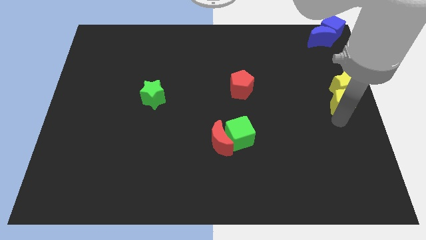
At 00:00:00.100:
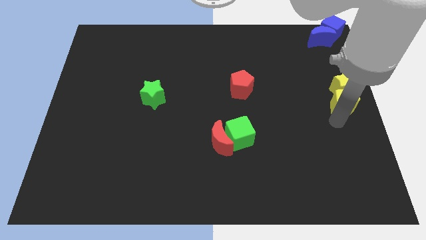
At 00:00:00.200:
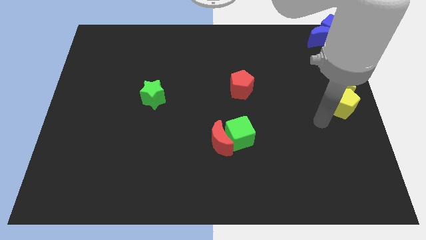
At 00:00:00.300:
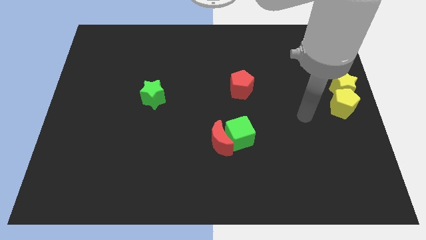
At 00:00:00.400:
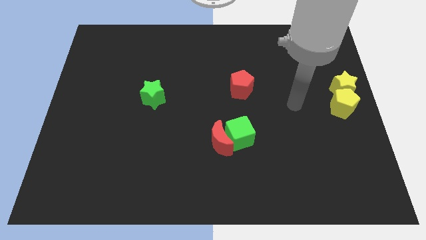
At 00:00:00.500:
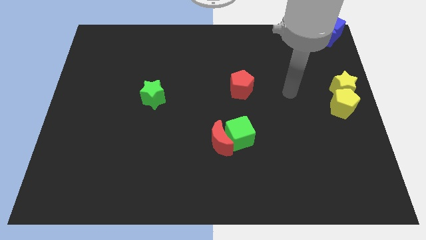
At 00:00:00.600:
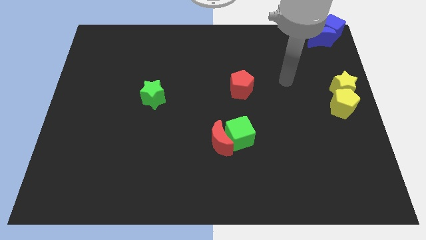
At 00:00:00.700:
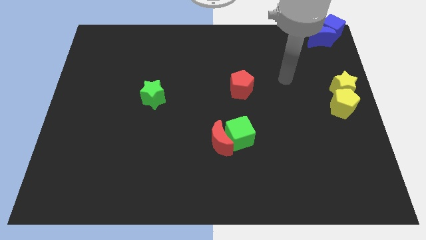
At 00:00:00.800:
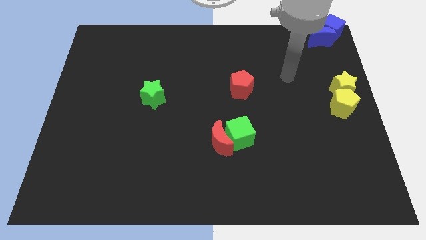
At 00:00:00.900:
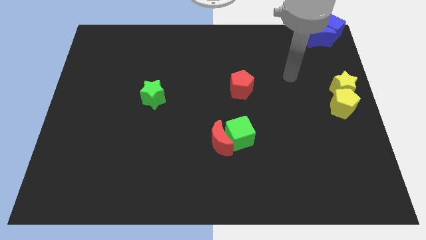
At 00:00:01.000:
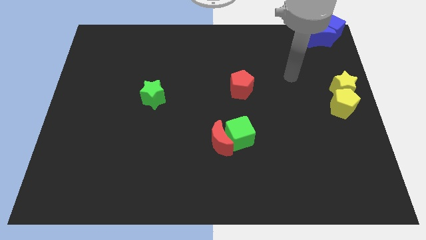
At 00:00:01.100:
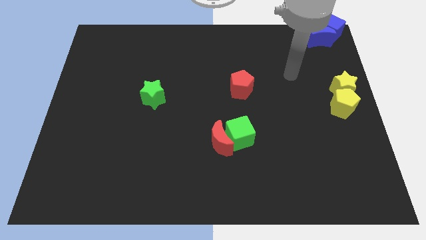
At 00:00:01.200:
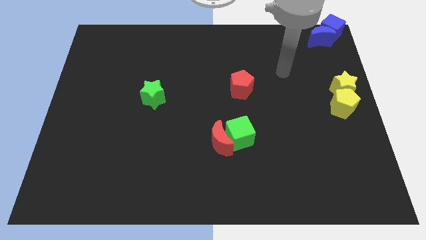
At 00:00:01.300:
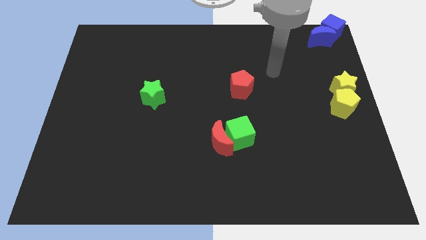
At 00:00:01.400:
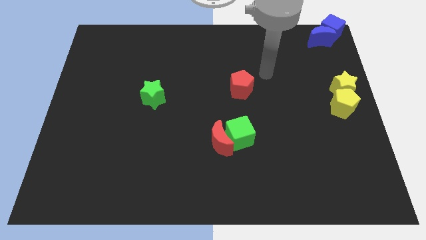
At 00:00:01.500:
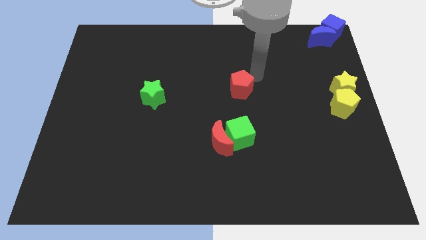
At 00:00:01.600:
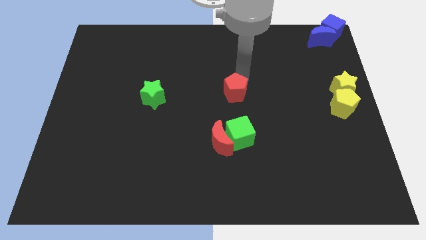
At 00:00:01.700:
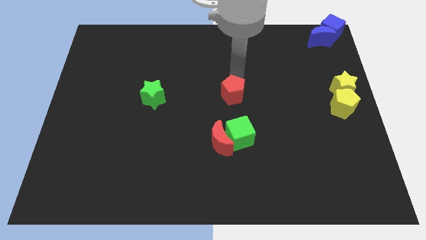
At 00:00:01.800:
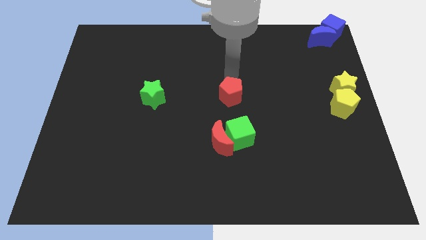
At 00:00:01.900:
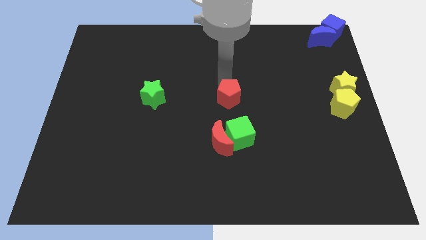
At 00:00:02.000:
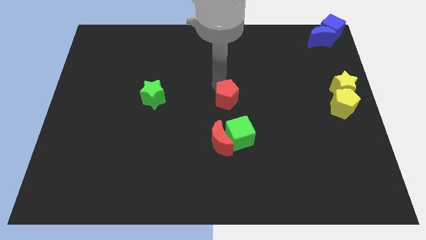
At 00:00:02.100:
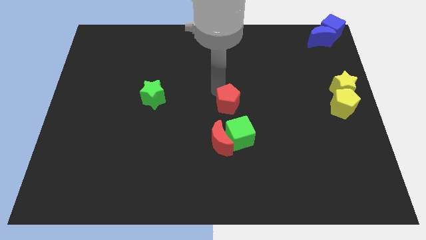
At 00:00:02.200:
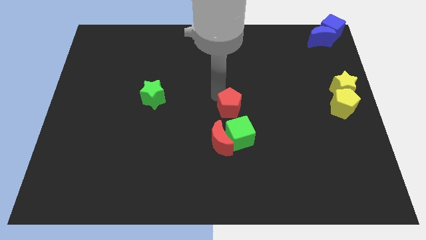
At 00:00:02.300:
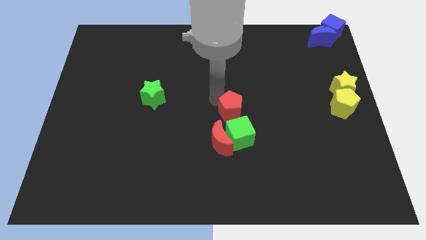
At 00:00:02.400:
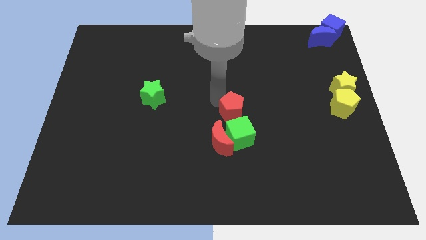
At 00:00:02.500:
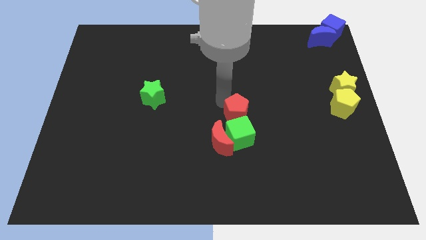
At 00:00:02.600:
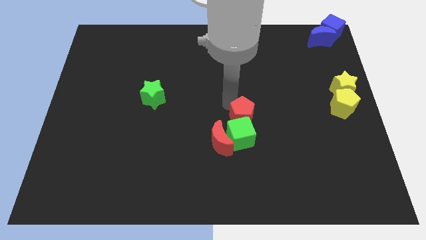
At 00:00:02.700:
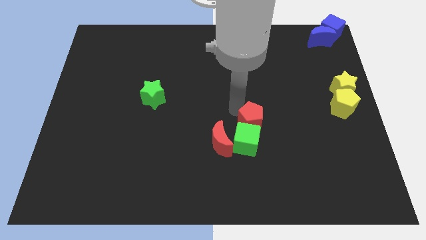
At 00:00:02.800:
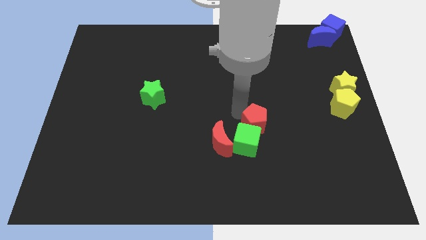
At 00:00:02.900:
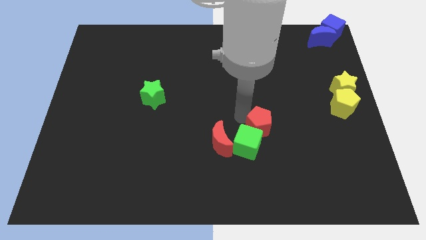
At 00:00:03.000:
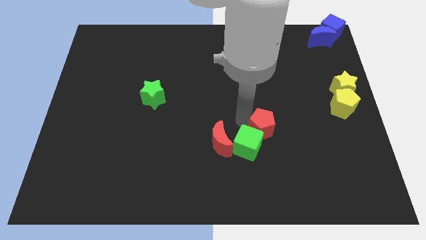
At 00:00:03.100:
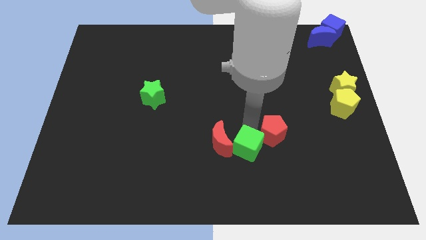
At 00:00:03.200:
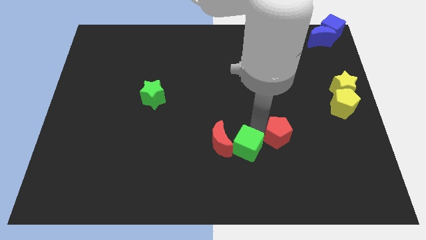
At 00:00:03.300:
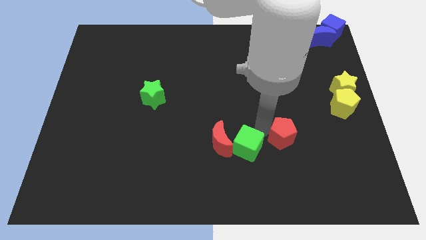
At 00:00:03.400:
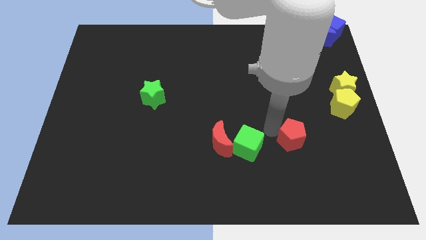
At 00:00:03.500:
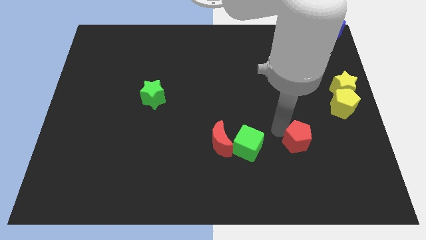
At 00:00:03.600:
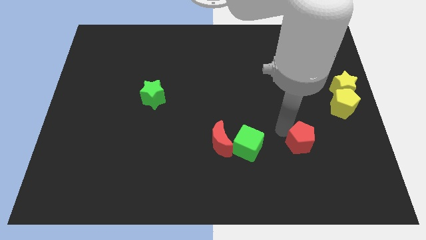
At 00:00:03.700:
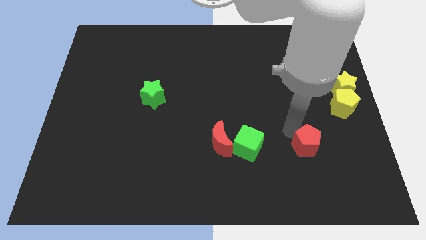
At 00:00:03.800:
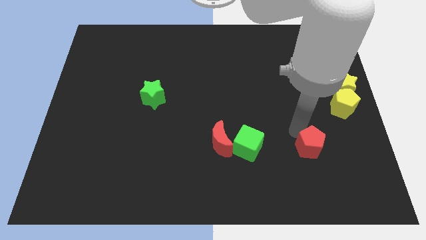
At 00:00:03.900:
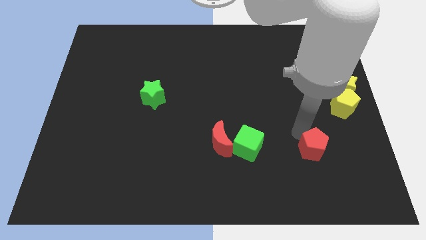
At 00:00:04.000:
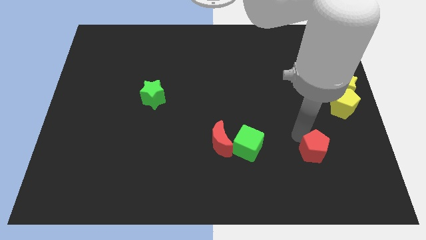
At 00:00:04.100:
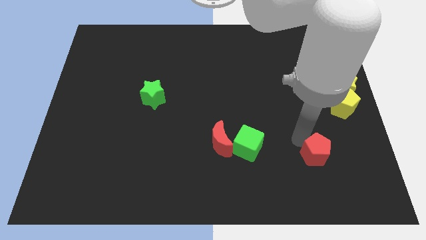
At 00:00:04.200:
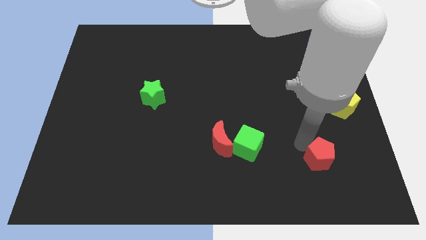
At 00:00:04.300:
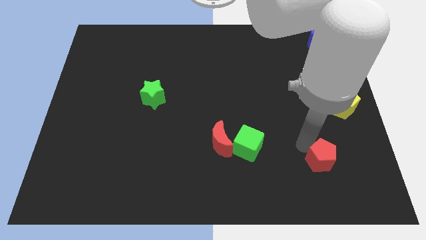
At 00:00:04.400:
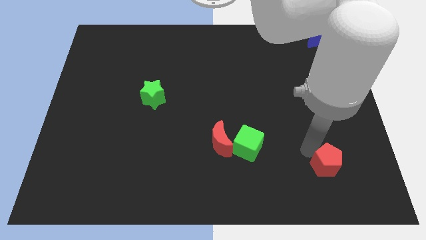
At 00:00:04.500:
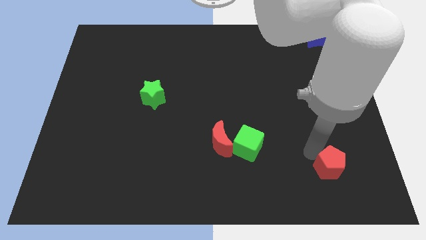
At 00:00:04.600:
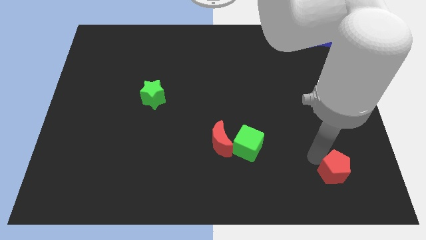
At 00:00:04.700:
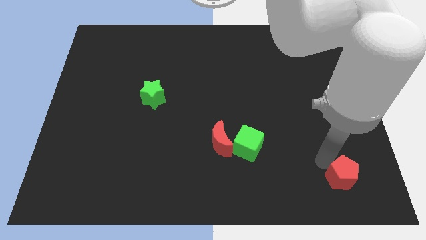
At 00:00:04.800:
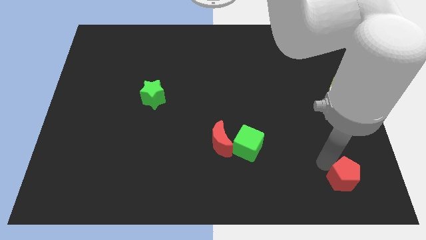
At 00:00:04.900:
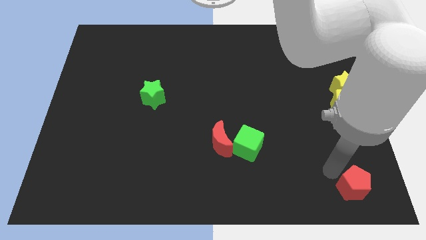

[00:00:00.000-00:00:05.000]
move the red pentagon towards bottom right side of the board

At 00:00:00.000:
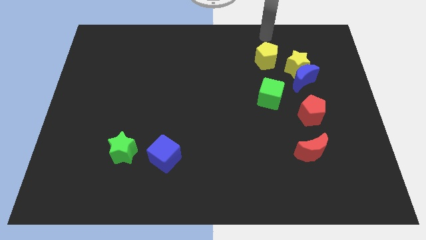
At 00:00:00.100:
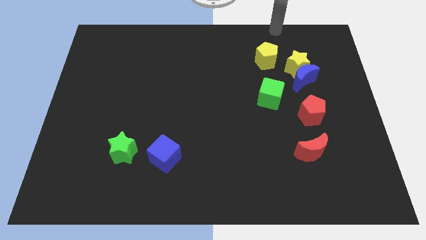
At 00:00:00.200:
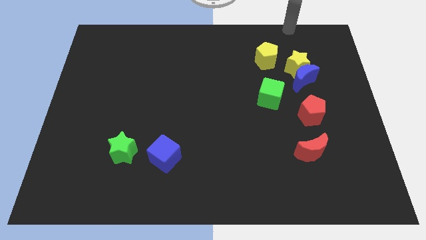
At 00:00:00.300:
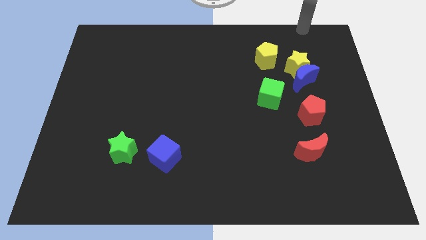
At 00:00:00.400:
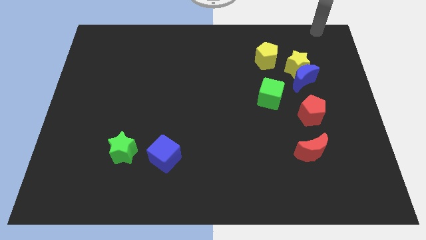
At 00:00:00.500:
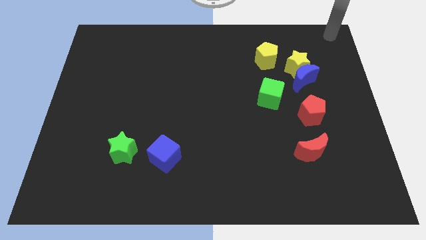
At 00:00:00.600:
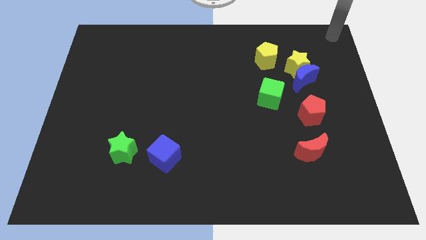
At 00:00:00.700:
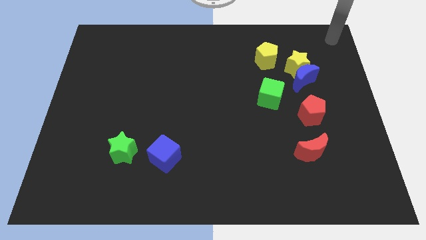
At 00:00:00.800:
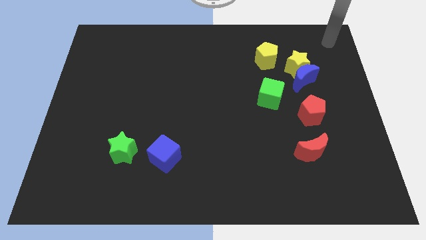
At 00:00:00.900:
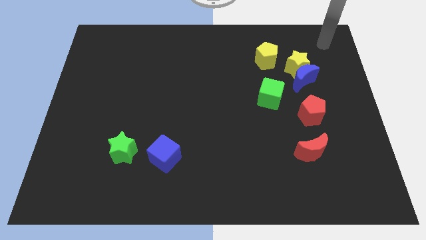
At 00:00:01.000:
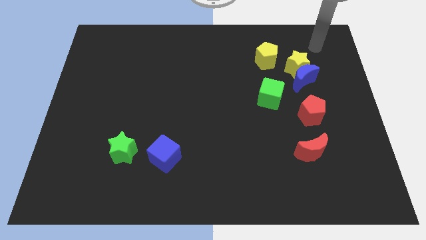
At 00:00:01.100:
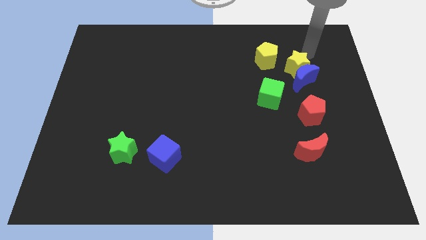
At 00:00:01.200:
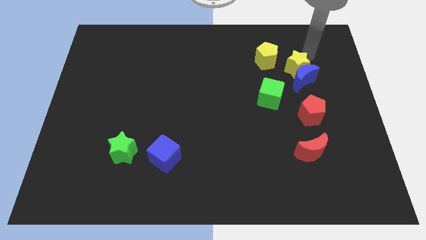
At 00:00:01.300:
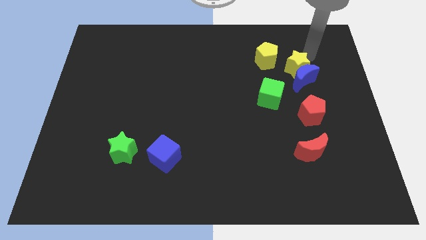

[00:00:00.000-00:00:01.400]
move your arm to the top of the yellow star

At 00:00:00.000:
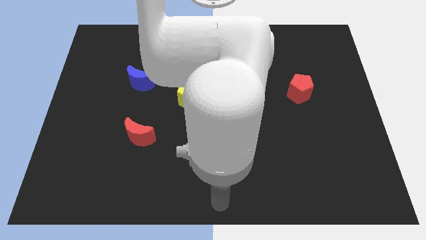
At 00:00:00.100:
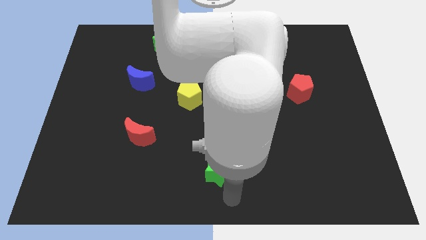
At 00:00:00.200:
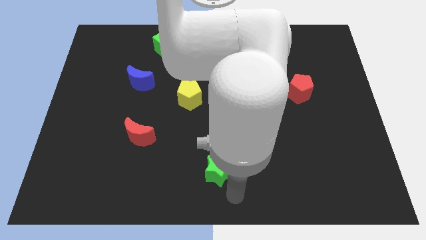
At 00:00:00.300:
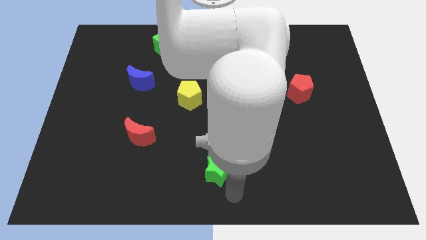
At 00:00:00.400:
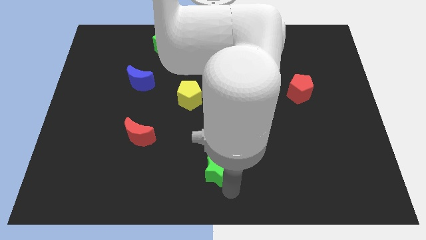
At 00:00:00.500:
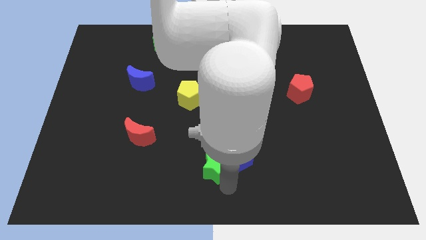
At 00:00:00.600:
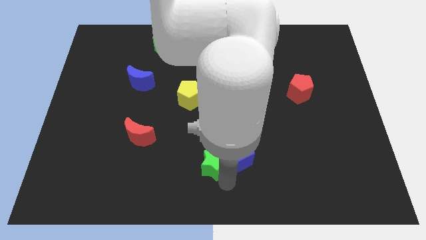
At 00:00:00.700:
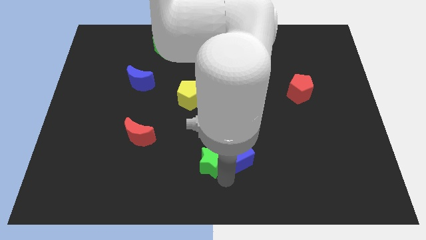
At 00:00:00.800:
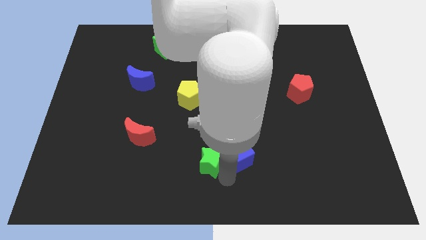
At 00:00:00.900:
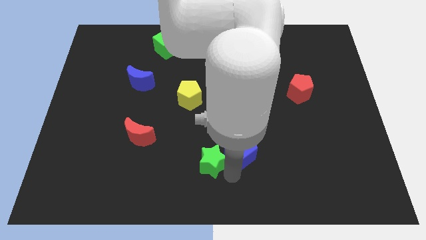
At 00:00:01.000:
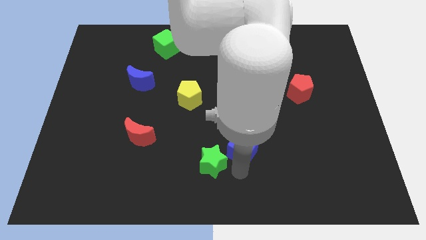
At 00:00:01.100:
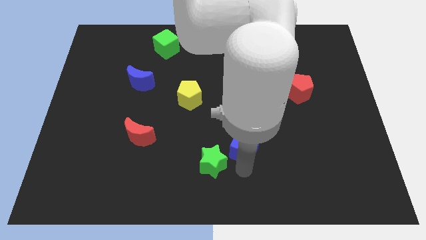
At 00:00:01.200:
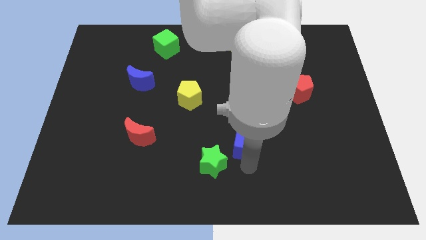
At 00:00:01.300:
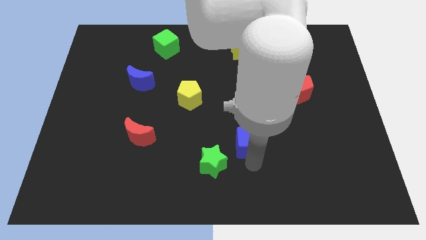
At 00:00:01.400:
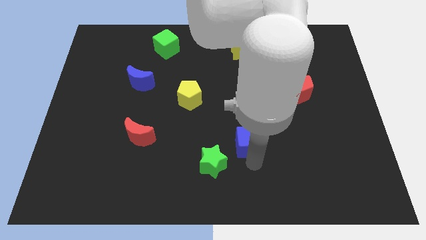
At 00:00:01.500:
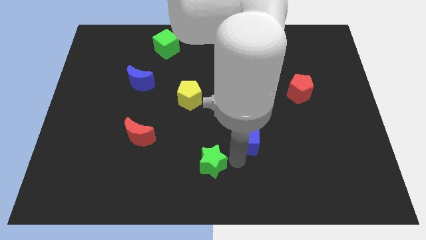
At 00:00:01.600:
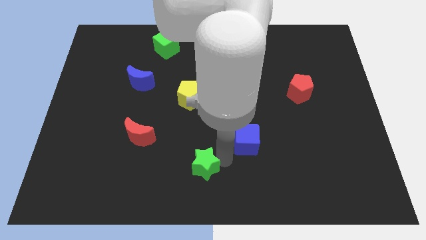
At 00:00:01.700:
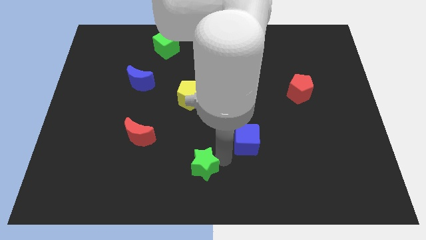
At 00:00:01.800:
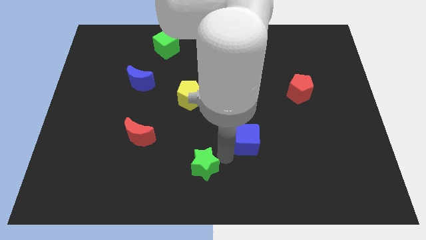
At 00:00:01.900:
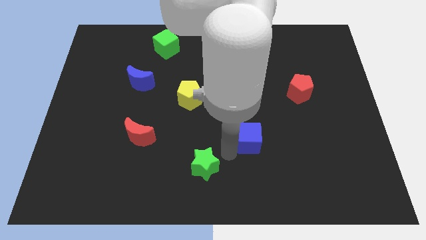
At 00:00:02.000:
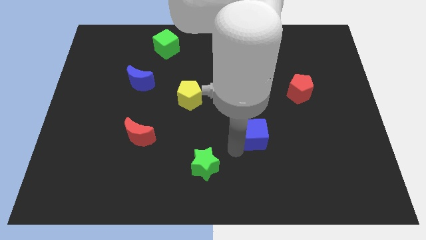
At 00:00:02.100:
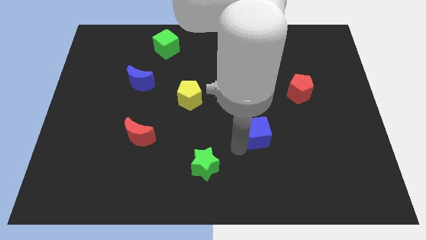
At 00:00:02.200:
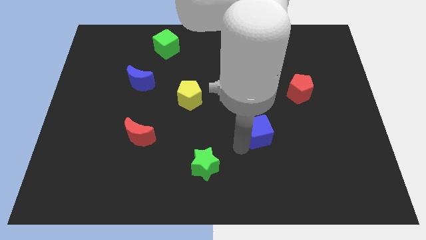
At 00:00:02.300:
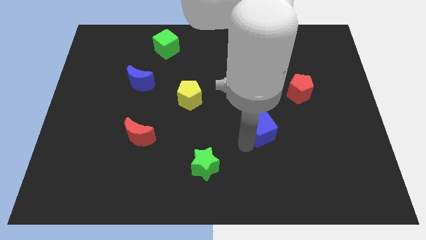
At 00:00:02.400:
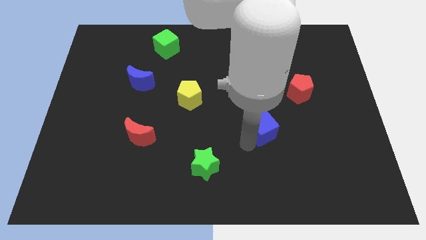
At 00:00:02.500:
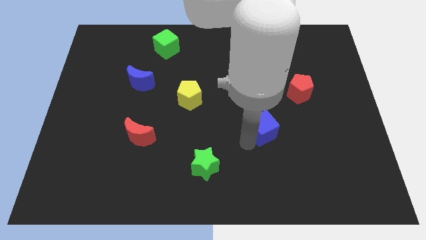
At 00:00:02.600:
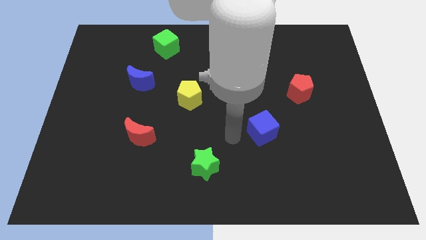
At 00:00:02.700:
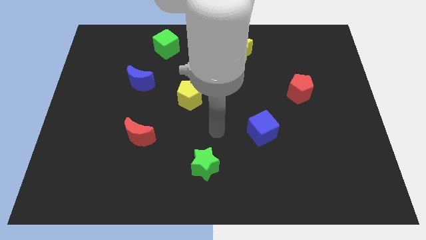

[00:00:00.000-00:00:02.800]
separate the green star and blue cube
